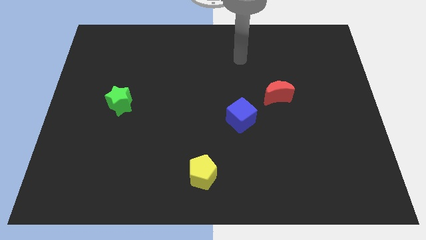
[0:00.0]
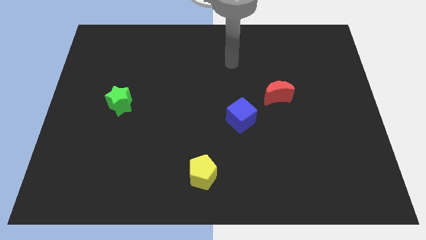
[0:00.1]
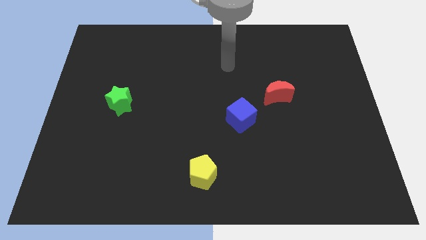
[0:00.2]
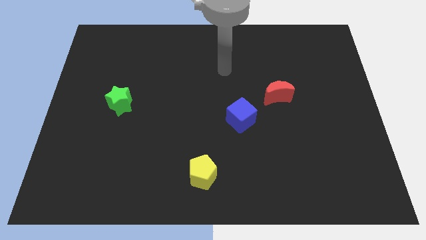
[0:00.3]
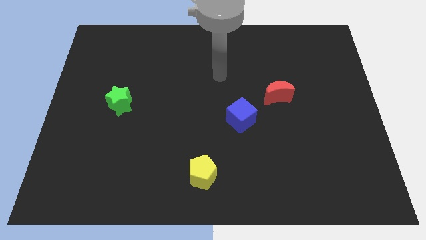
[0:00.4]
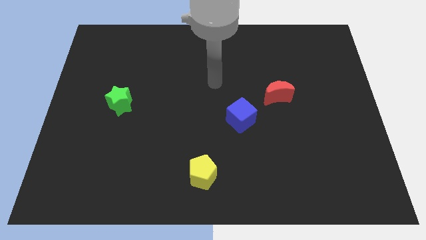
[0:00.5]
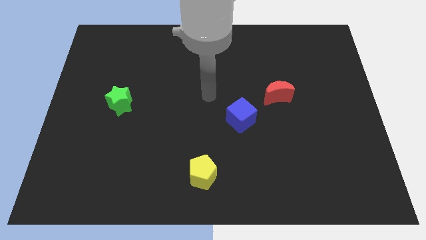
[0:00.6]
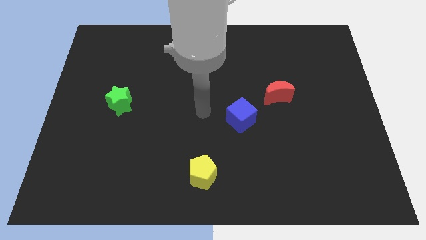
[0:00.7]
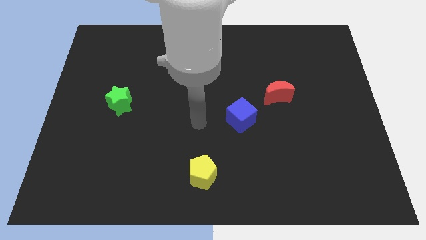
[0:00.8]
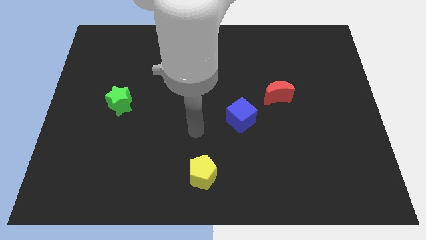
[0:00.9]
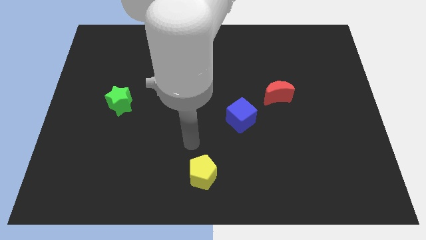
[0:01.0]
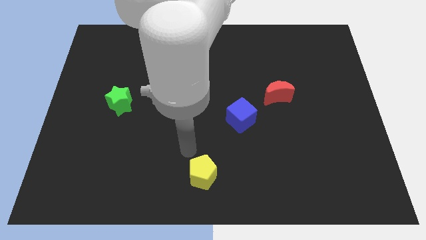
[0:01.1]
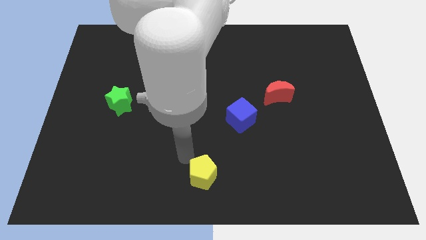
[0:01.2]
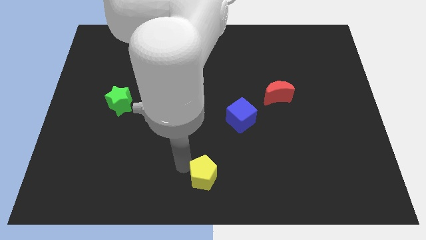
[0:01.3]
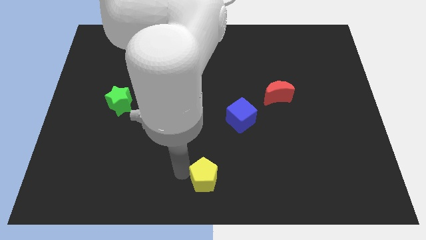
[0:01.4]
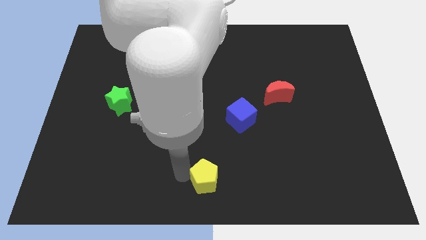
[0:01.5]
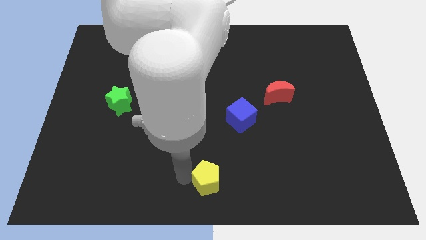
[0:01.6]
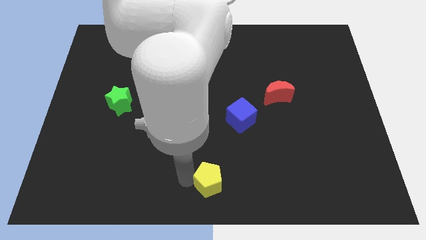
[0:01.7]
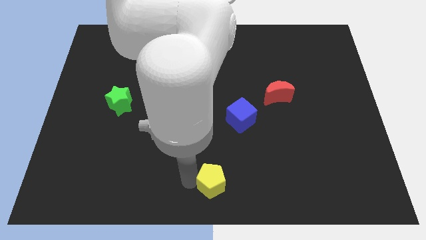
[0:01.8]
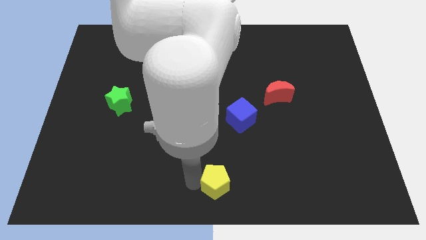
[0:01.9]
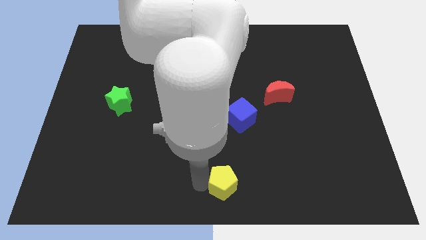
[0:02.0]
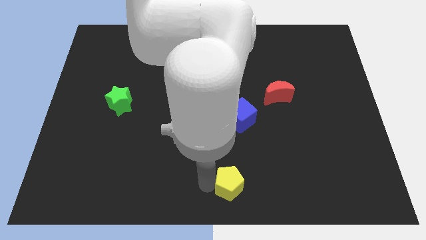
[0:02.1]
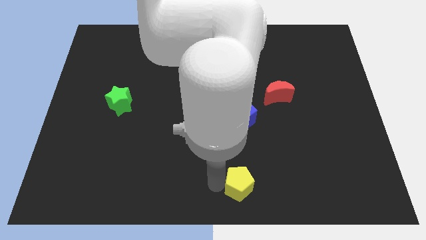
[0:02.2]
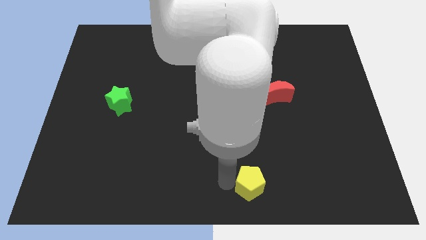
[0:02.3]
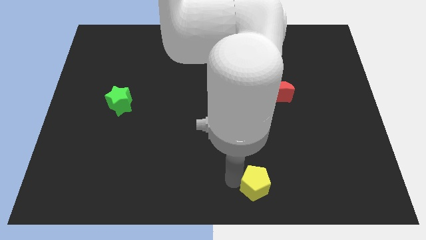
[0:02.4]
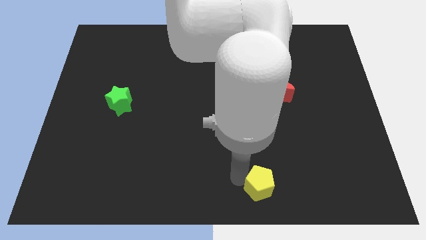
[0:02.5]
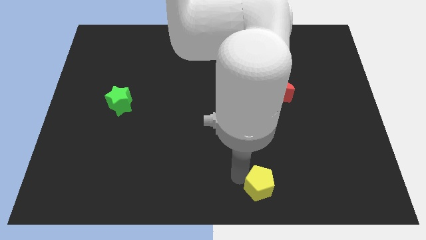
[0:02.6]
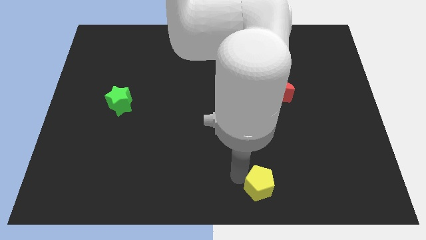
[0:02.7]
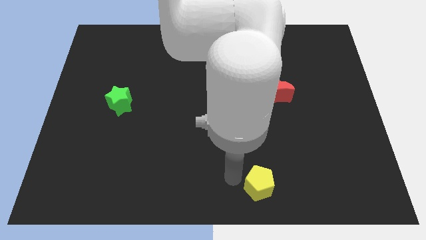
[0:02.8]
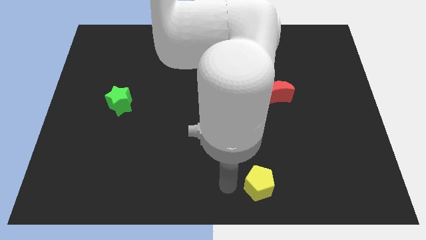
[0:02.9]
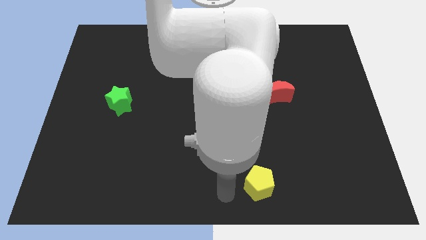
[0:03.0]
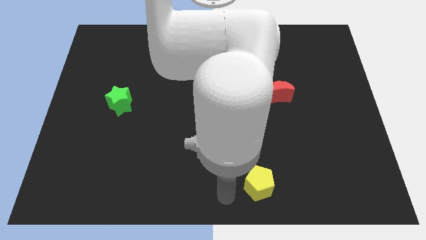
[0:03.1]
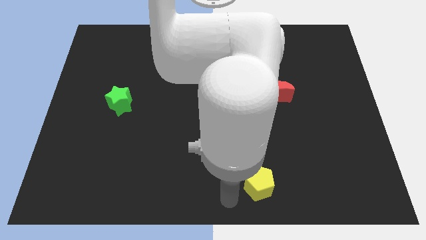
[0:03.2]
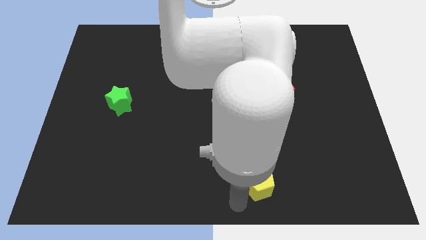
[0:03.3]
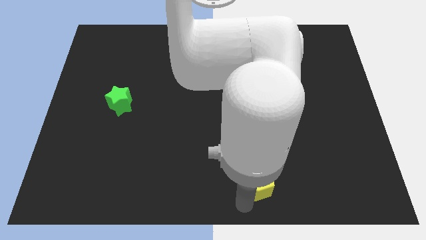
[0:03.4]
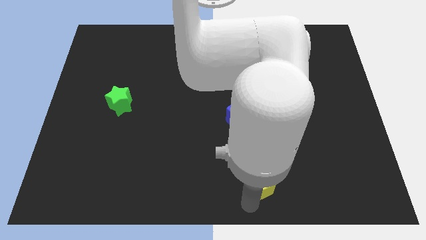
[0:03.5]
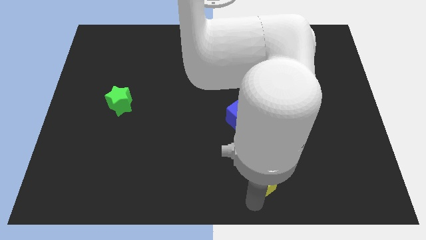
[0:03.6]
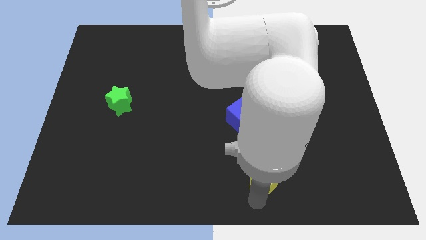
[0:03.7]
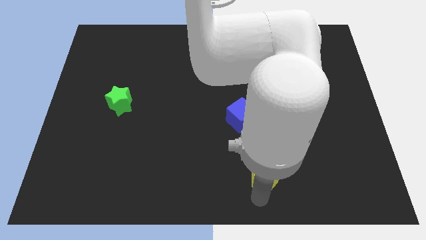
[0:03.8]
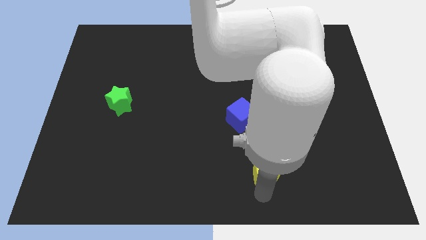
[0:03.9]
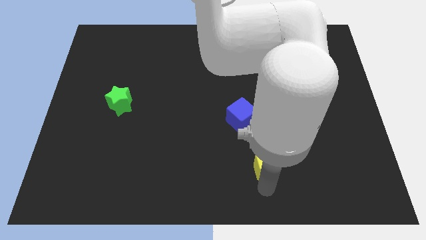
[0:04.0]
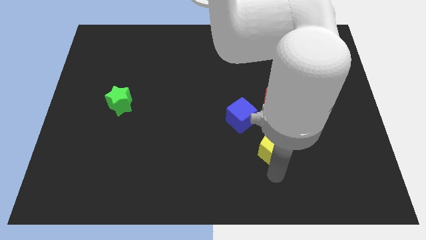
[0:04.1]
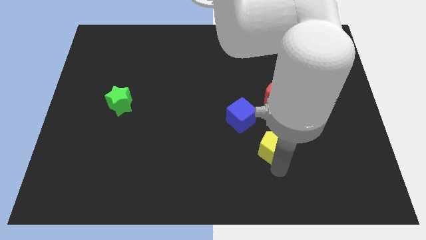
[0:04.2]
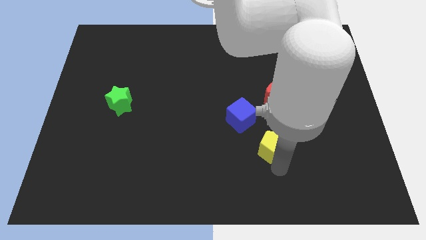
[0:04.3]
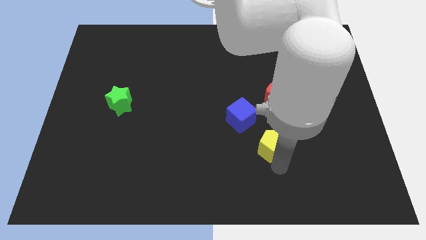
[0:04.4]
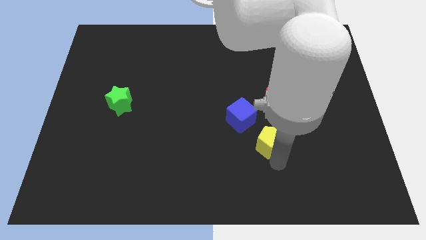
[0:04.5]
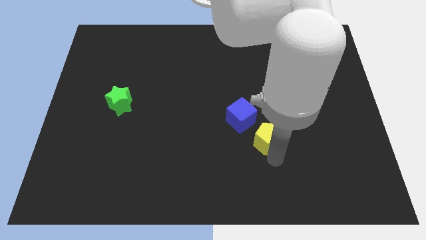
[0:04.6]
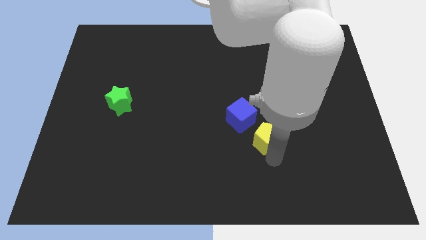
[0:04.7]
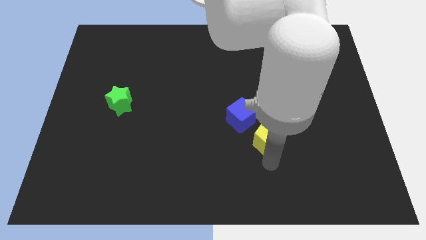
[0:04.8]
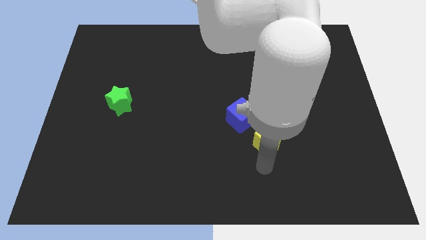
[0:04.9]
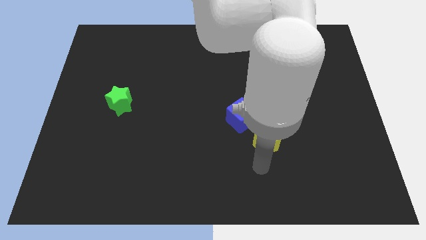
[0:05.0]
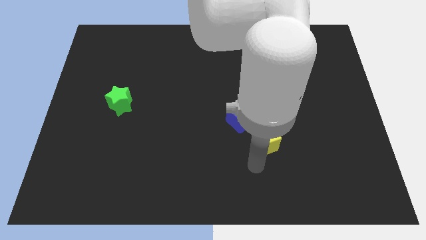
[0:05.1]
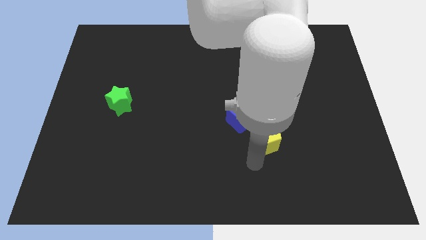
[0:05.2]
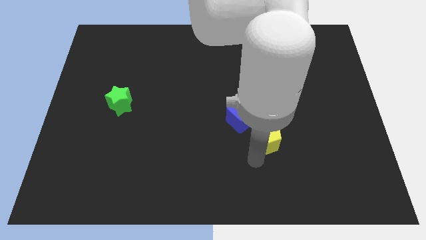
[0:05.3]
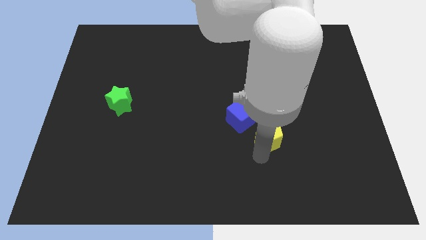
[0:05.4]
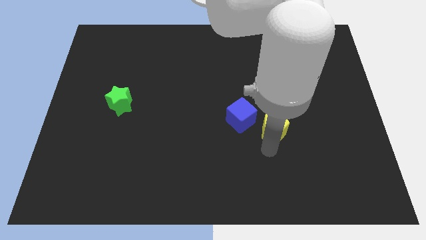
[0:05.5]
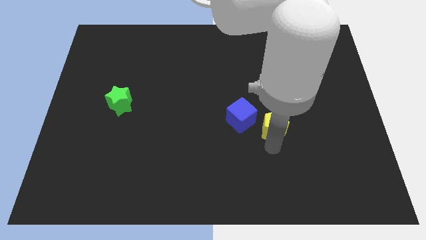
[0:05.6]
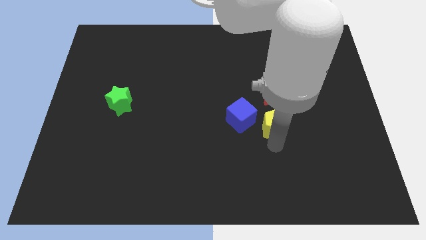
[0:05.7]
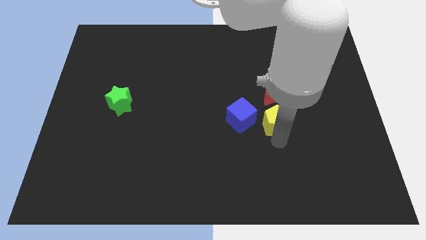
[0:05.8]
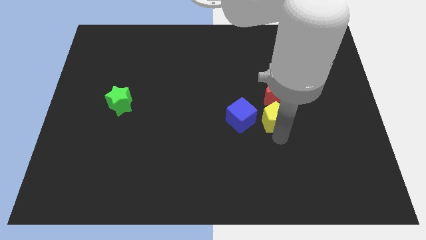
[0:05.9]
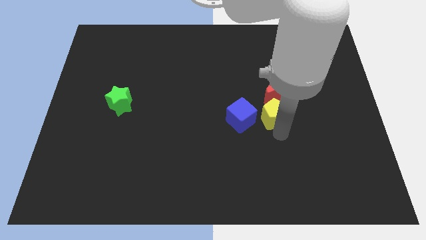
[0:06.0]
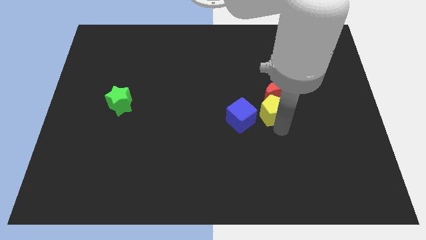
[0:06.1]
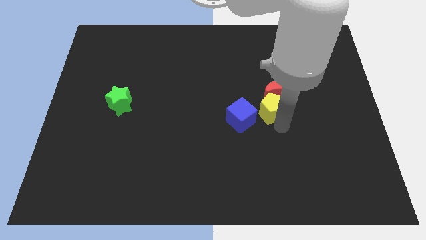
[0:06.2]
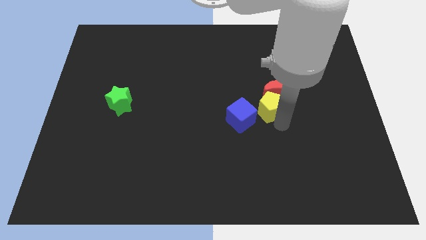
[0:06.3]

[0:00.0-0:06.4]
move the yellow block next to the red block

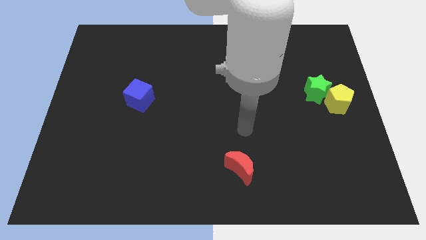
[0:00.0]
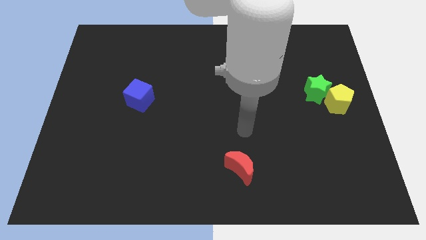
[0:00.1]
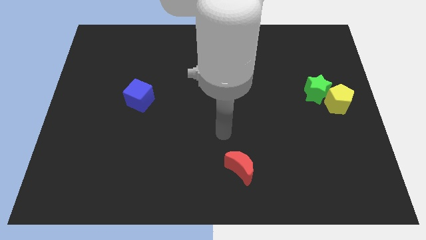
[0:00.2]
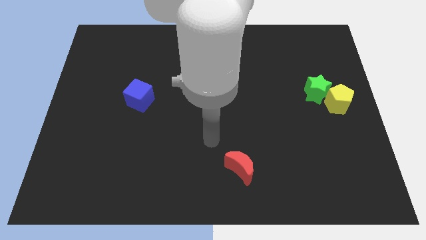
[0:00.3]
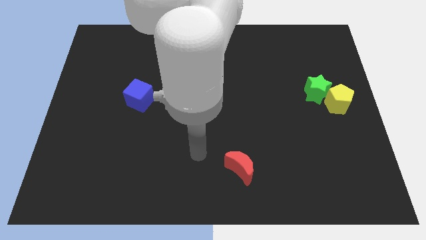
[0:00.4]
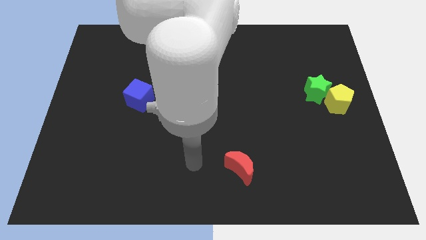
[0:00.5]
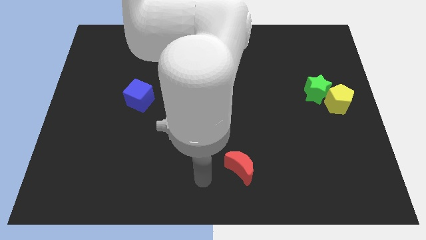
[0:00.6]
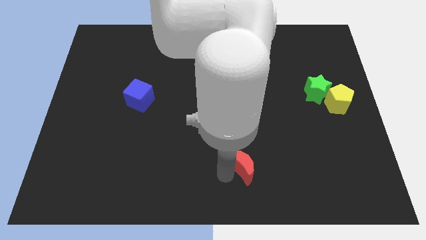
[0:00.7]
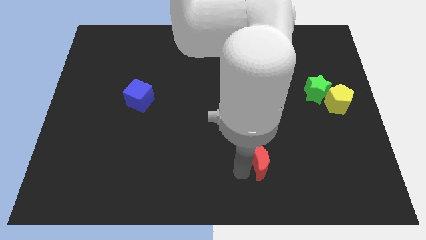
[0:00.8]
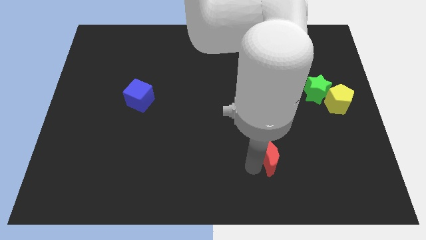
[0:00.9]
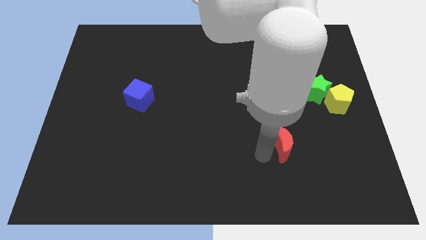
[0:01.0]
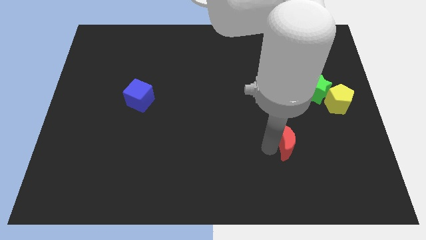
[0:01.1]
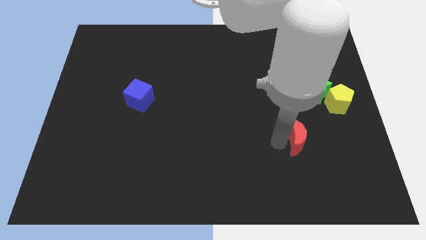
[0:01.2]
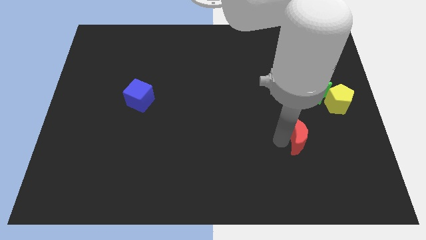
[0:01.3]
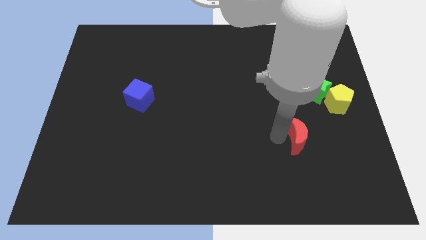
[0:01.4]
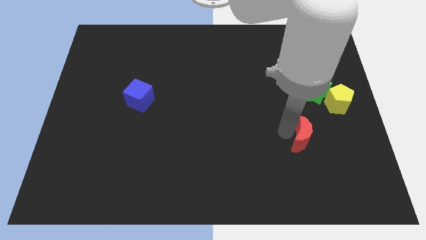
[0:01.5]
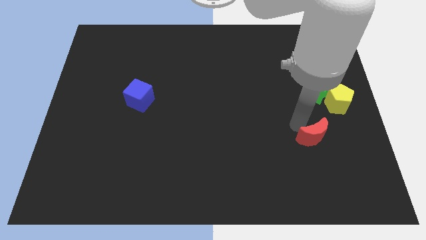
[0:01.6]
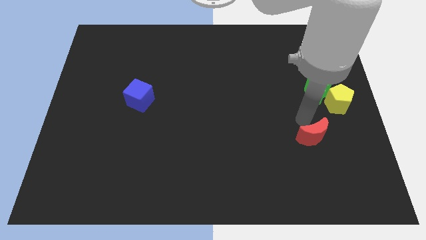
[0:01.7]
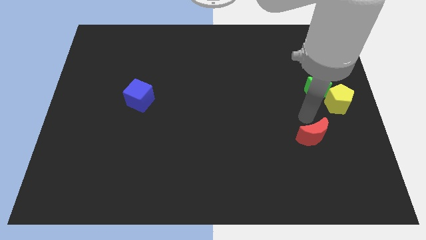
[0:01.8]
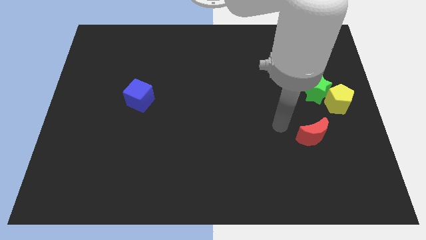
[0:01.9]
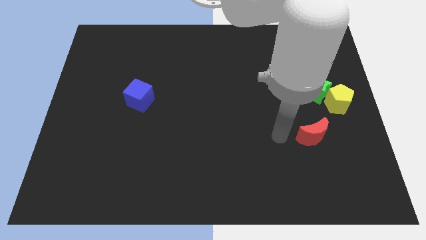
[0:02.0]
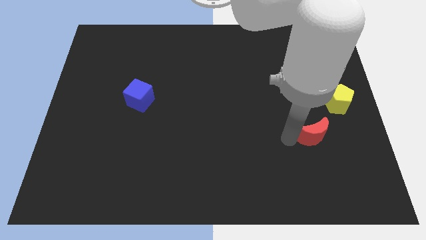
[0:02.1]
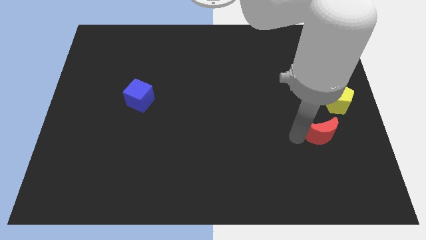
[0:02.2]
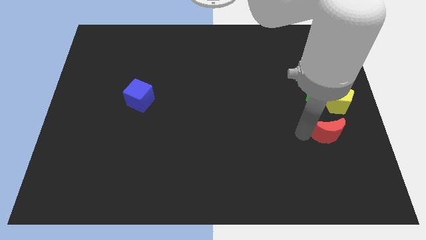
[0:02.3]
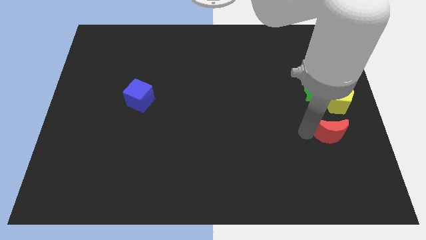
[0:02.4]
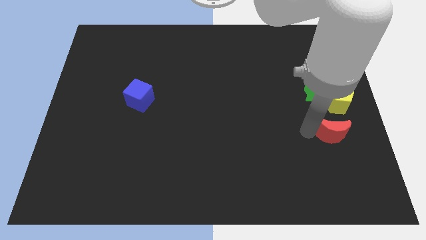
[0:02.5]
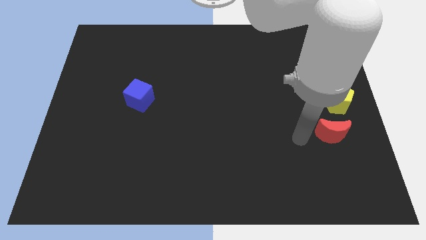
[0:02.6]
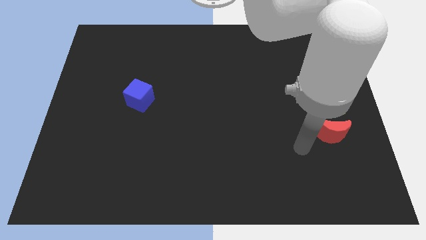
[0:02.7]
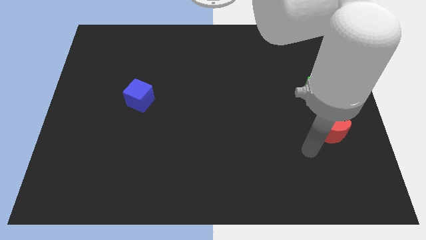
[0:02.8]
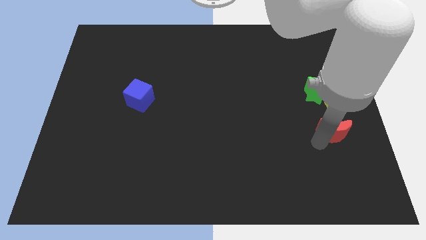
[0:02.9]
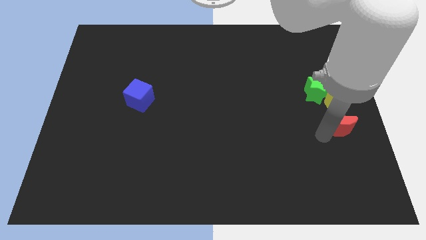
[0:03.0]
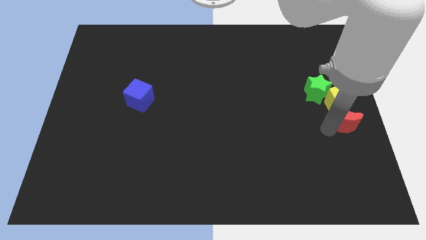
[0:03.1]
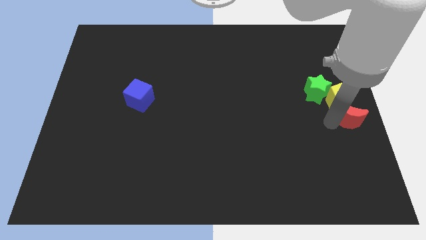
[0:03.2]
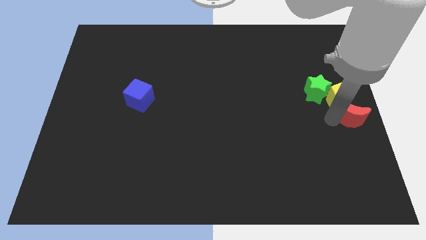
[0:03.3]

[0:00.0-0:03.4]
slide the red block towards the pentagon
